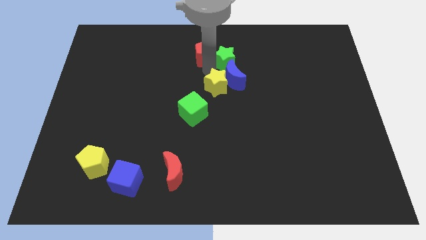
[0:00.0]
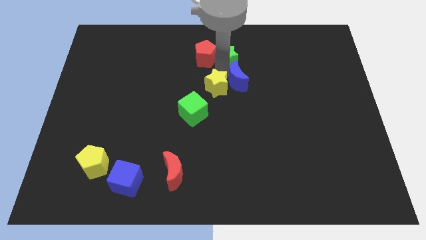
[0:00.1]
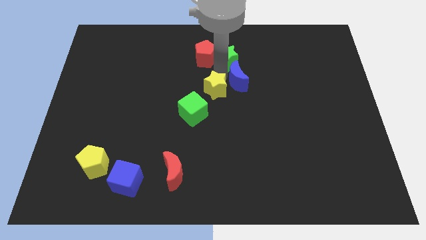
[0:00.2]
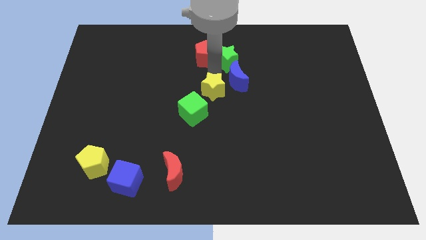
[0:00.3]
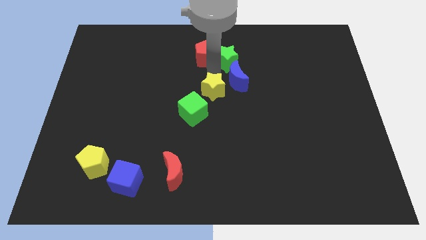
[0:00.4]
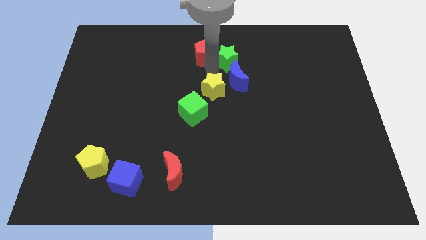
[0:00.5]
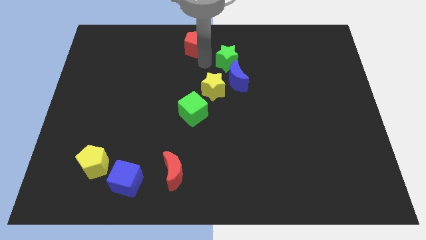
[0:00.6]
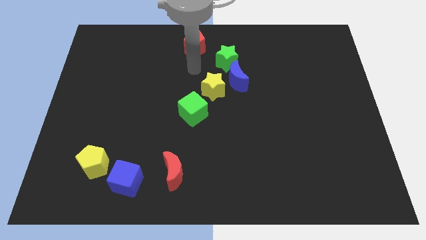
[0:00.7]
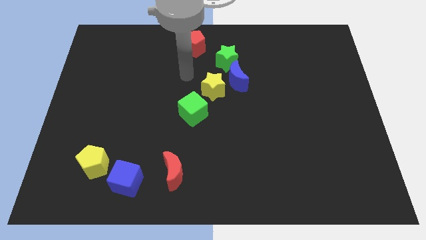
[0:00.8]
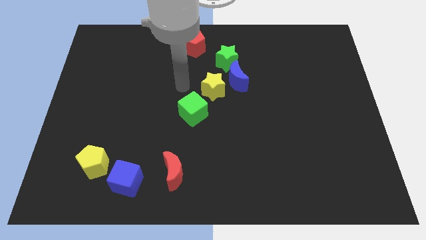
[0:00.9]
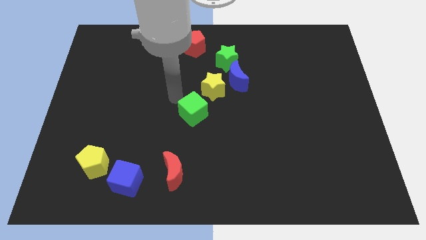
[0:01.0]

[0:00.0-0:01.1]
separate red pentagon and the green star

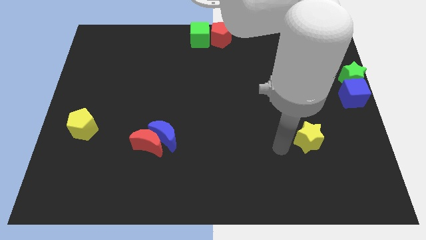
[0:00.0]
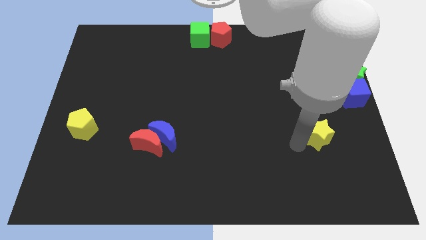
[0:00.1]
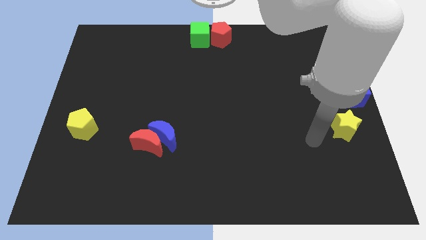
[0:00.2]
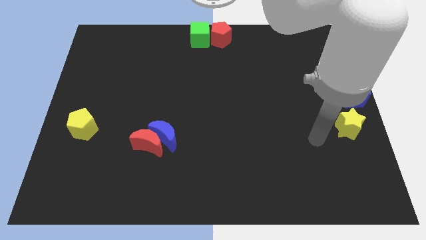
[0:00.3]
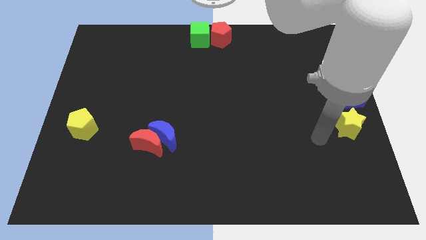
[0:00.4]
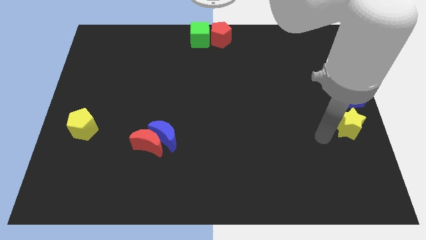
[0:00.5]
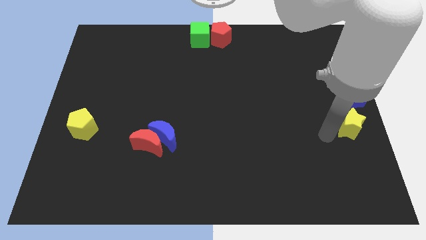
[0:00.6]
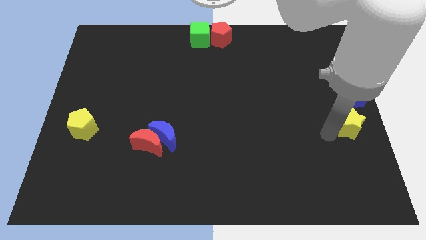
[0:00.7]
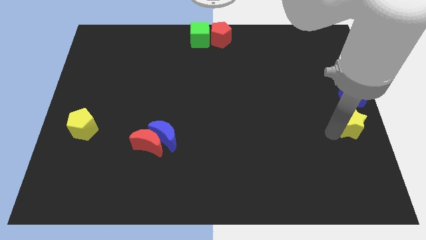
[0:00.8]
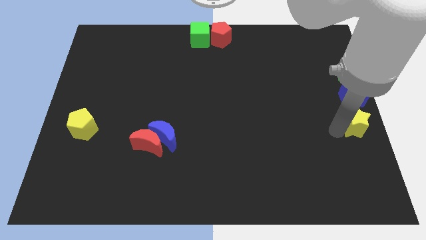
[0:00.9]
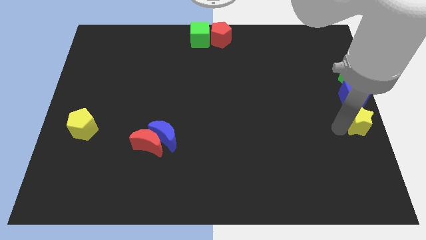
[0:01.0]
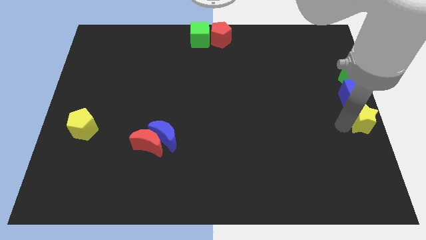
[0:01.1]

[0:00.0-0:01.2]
slide the yellow star to the bottom side of the blue cube

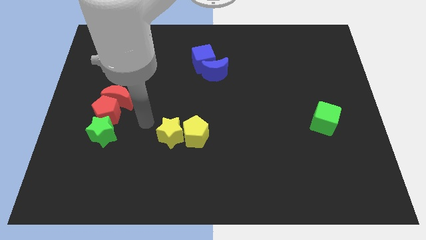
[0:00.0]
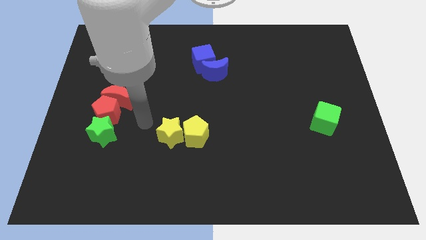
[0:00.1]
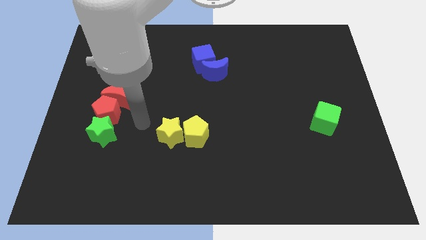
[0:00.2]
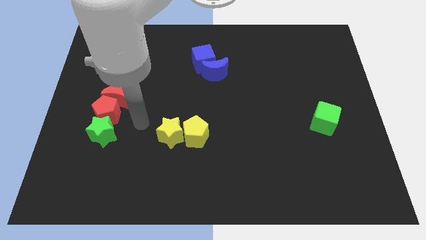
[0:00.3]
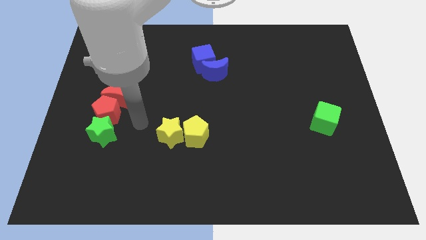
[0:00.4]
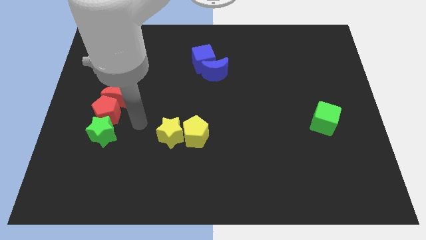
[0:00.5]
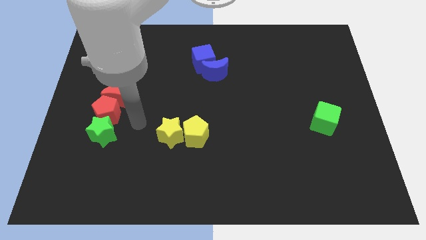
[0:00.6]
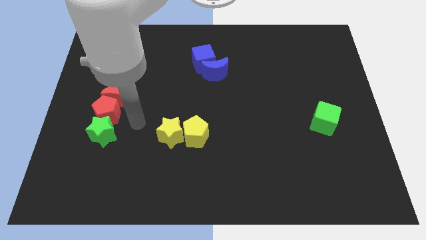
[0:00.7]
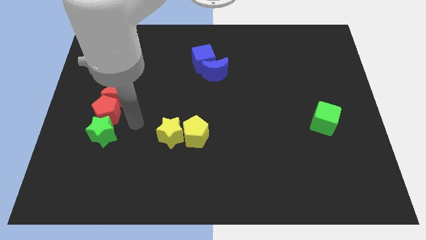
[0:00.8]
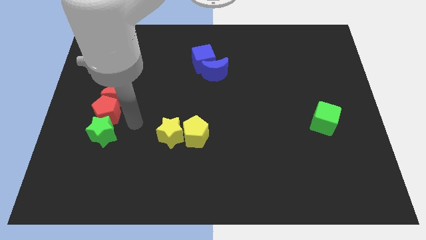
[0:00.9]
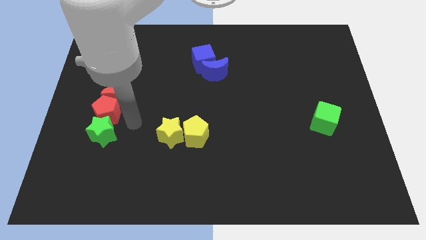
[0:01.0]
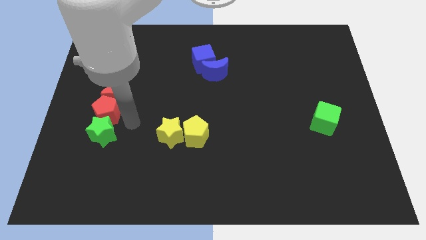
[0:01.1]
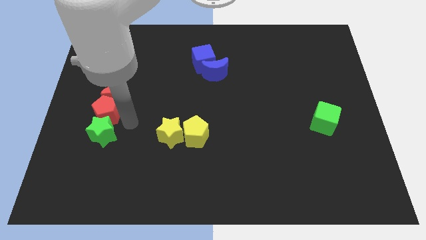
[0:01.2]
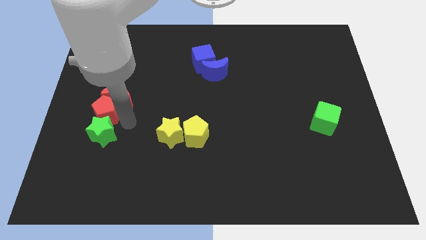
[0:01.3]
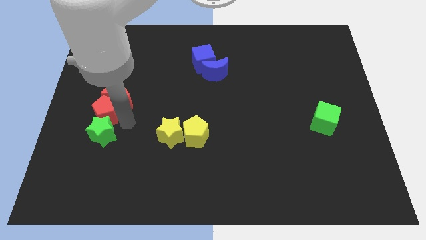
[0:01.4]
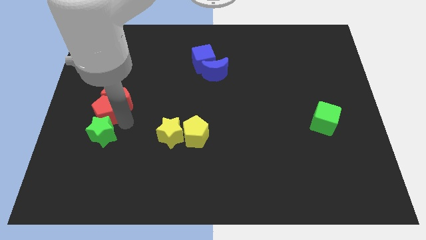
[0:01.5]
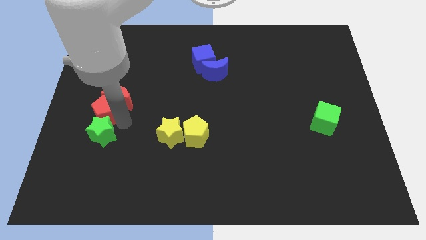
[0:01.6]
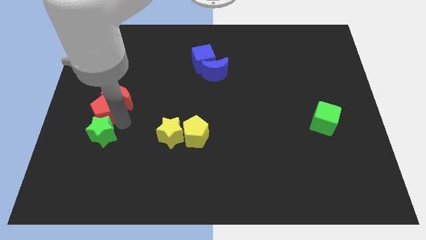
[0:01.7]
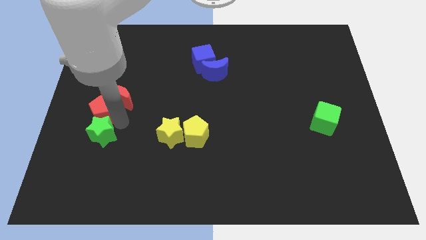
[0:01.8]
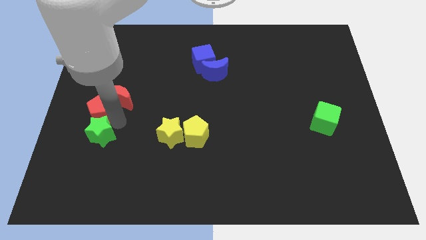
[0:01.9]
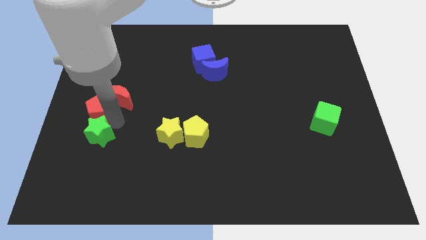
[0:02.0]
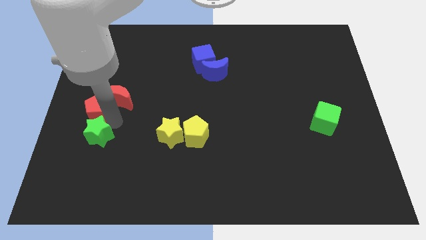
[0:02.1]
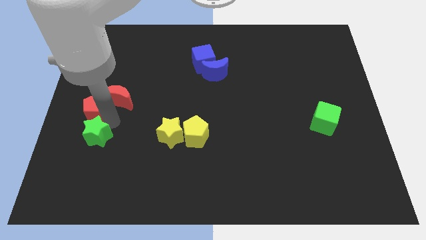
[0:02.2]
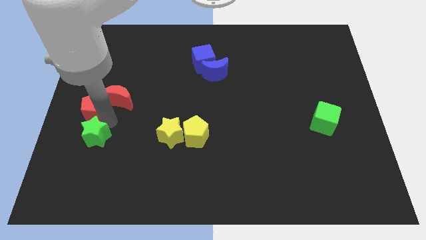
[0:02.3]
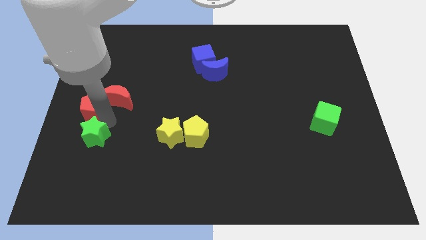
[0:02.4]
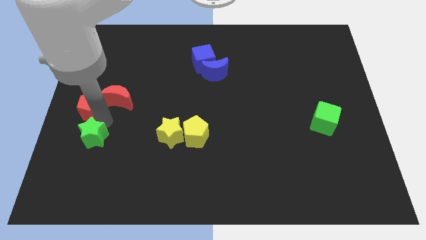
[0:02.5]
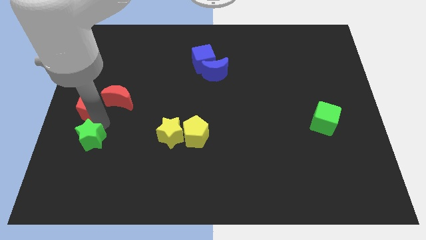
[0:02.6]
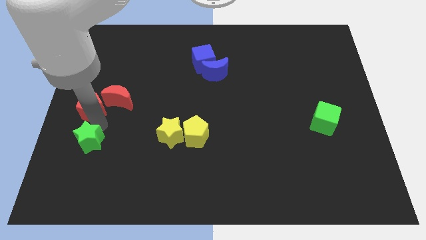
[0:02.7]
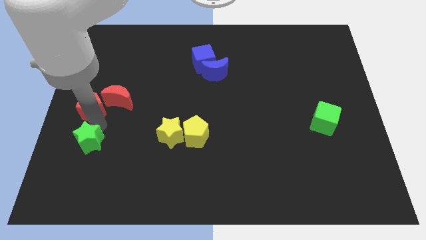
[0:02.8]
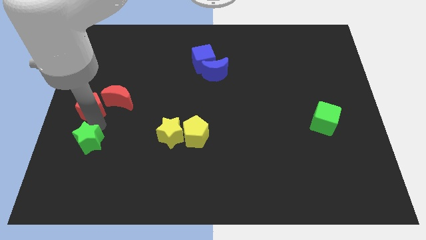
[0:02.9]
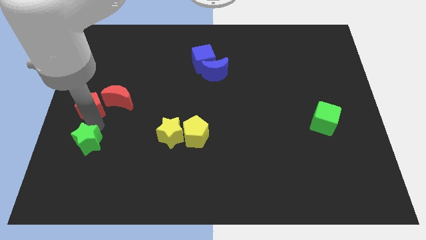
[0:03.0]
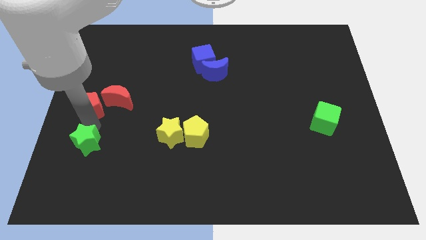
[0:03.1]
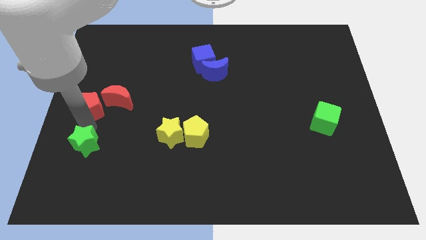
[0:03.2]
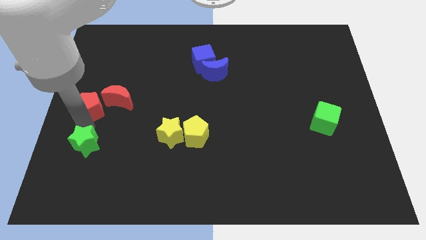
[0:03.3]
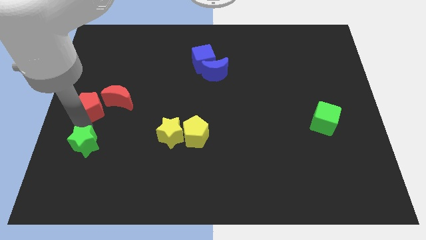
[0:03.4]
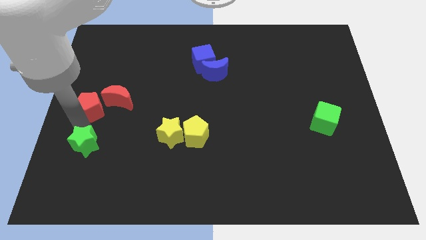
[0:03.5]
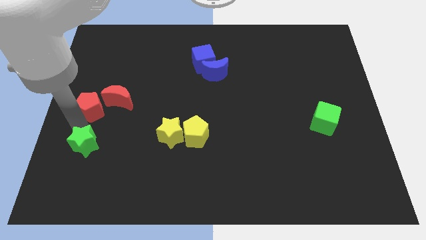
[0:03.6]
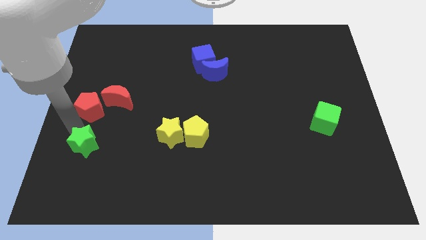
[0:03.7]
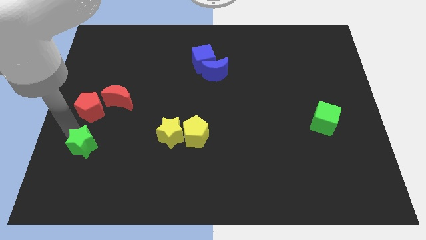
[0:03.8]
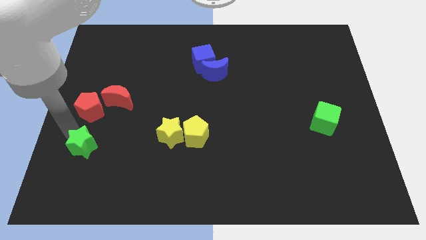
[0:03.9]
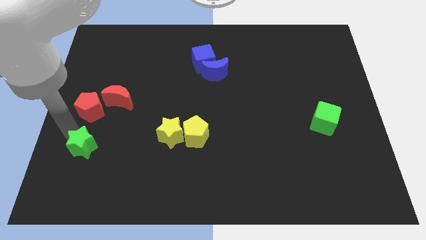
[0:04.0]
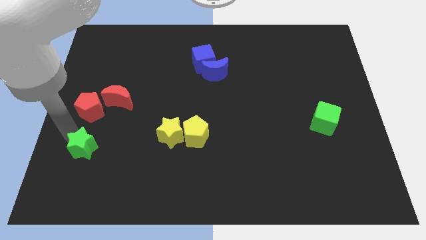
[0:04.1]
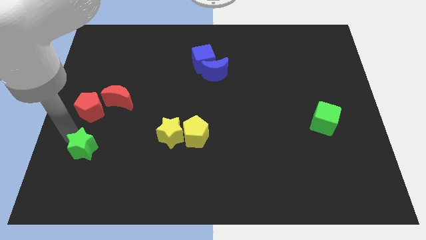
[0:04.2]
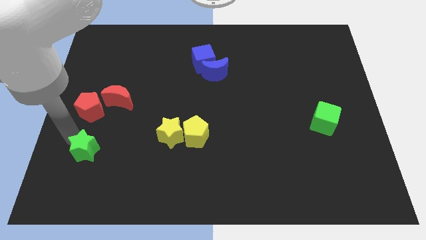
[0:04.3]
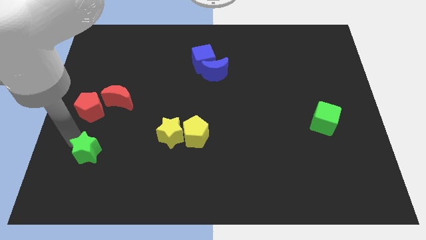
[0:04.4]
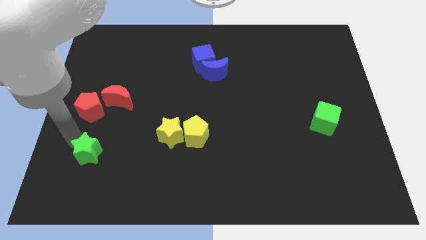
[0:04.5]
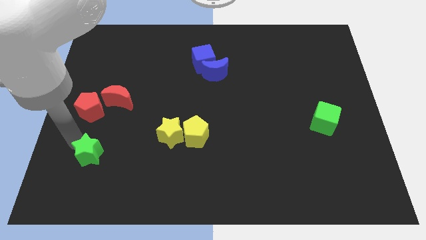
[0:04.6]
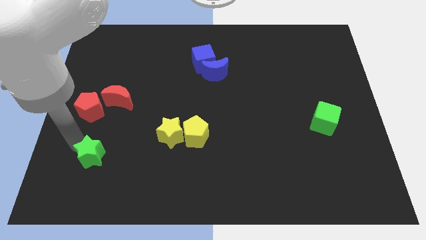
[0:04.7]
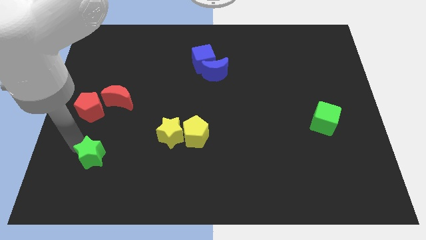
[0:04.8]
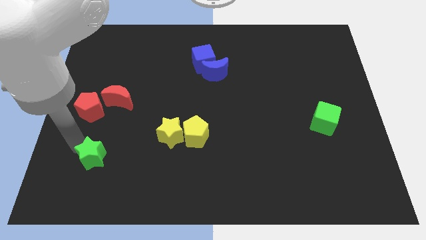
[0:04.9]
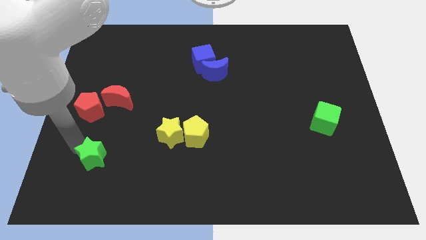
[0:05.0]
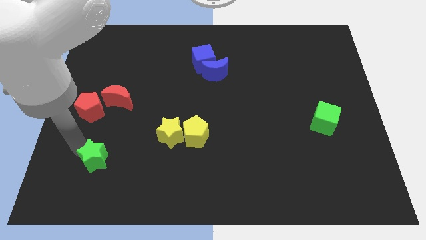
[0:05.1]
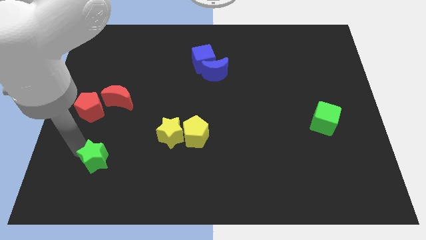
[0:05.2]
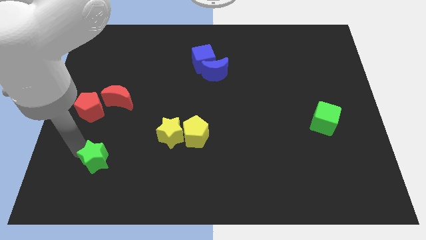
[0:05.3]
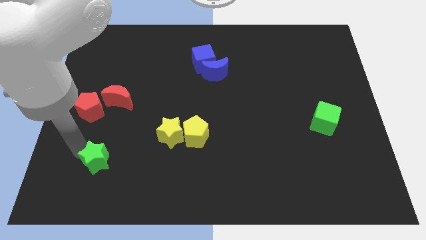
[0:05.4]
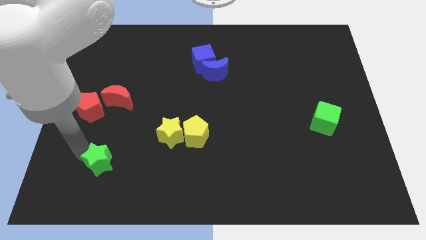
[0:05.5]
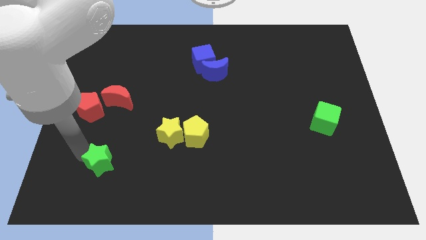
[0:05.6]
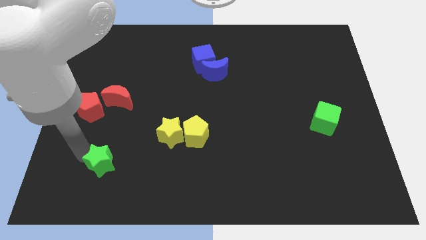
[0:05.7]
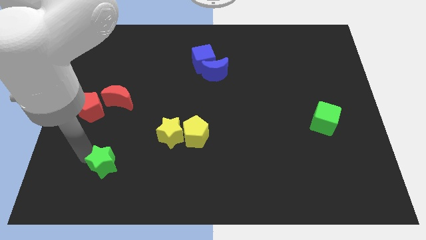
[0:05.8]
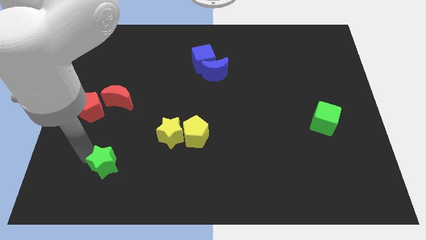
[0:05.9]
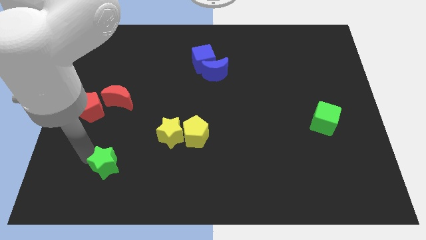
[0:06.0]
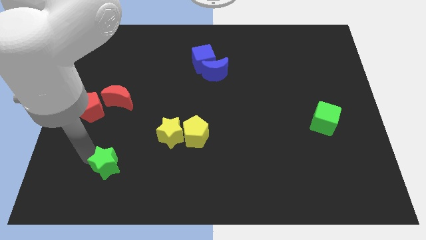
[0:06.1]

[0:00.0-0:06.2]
seperate the red pentagon and green star

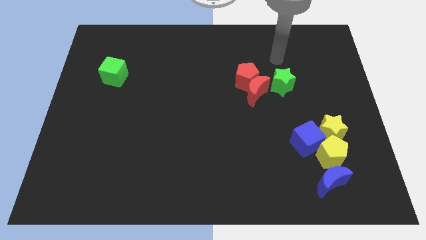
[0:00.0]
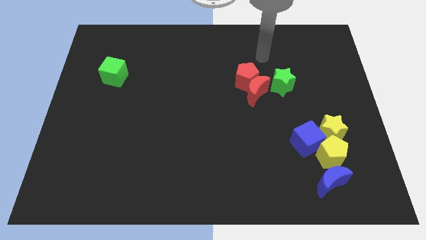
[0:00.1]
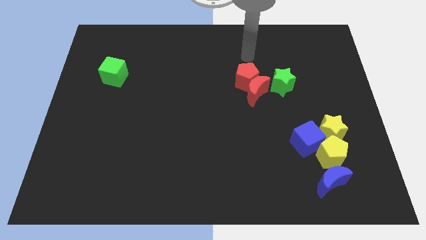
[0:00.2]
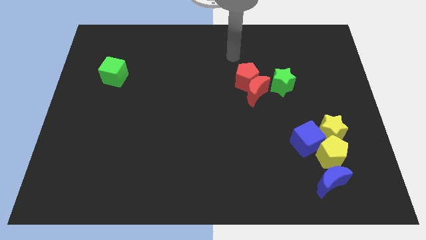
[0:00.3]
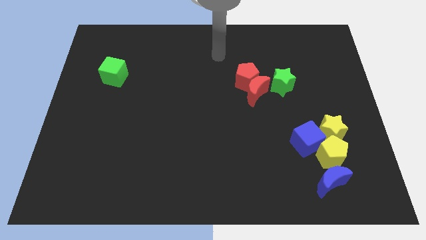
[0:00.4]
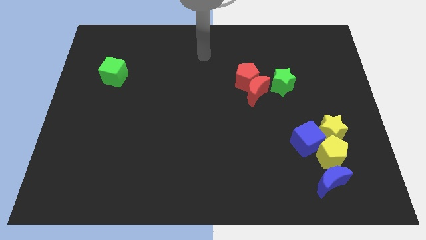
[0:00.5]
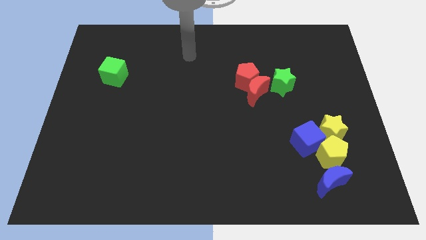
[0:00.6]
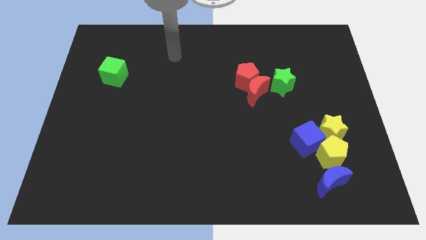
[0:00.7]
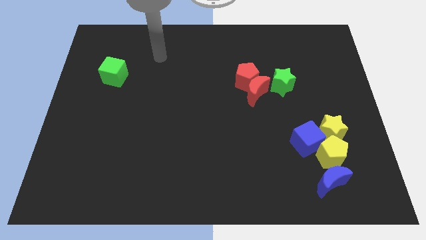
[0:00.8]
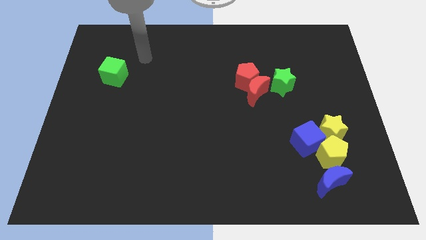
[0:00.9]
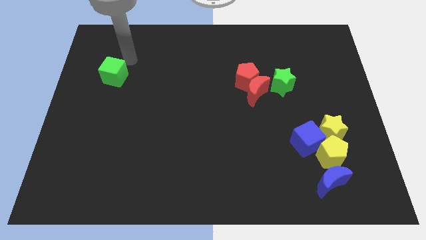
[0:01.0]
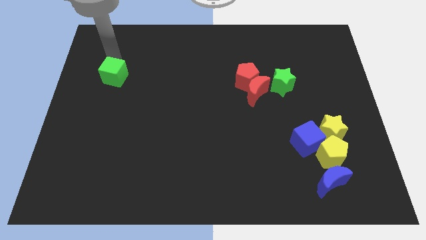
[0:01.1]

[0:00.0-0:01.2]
move your arm towards green cube
